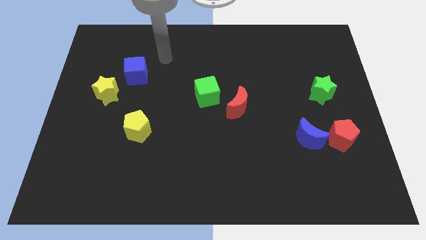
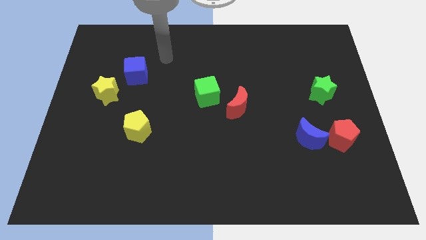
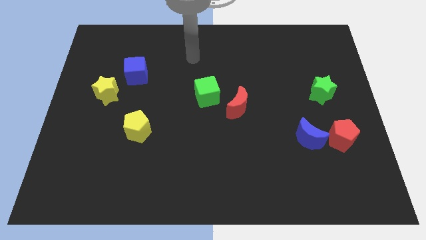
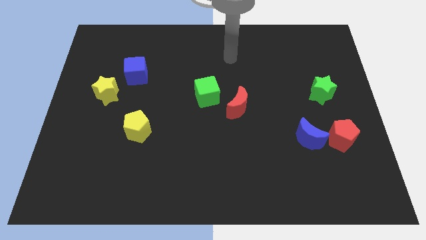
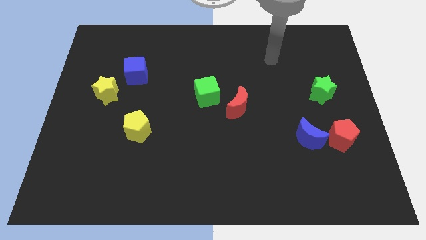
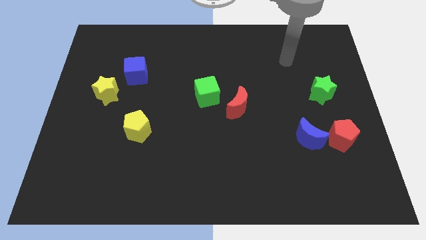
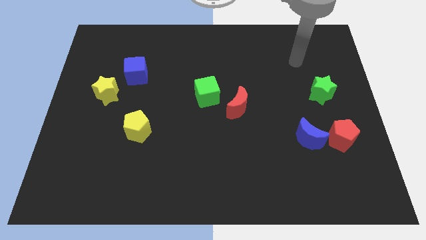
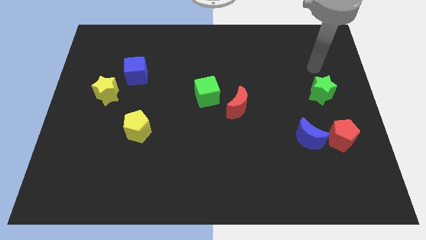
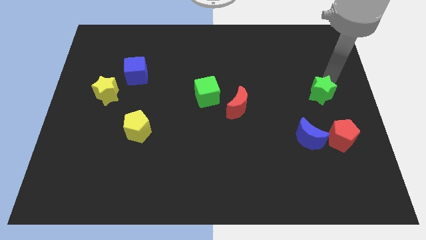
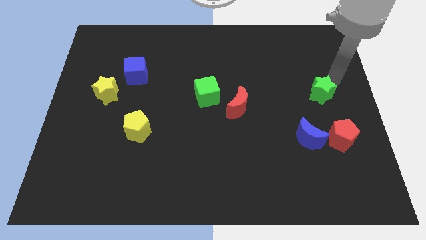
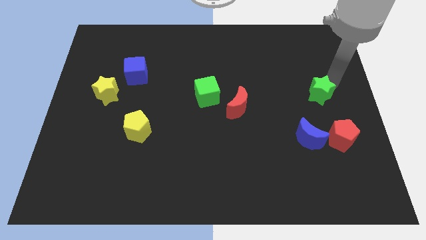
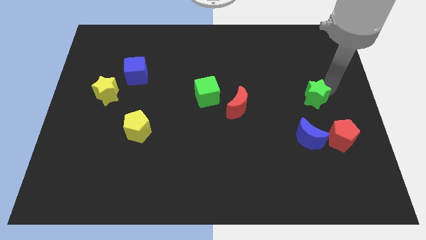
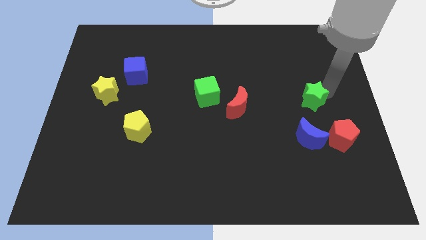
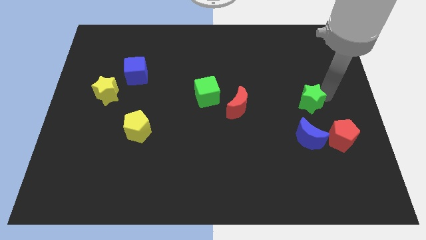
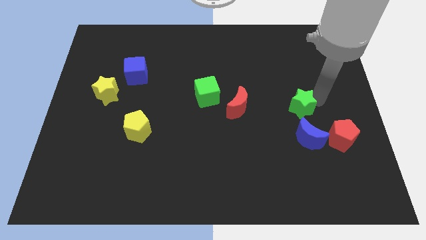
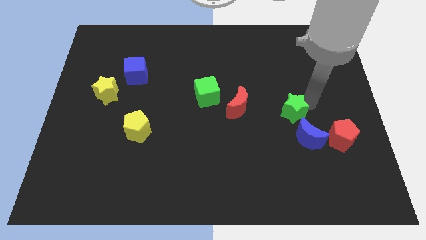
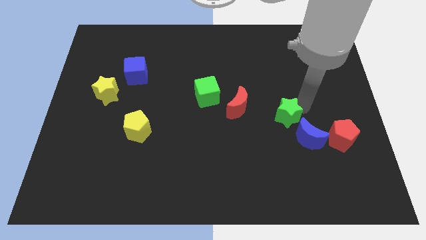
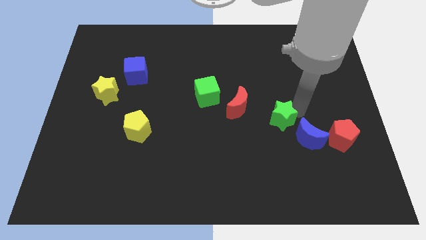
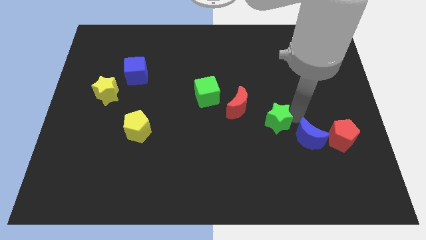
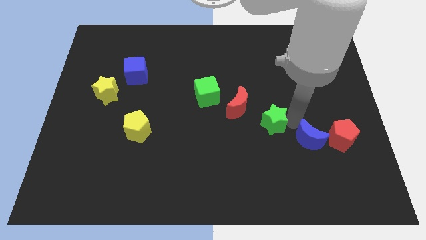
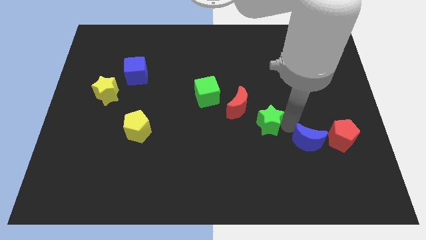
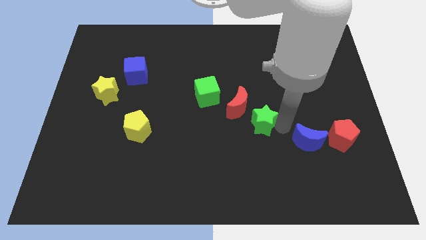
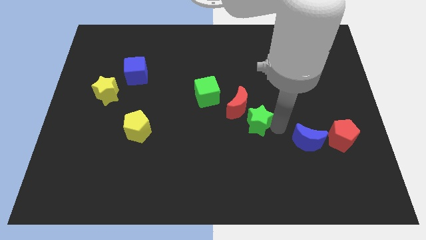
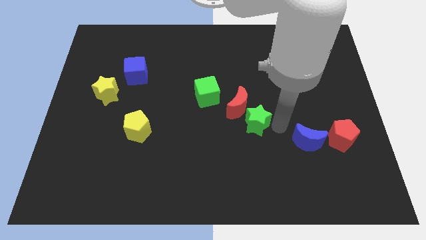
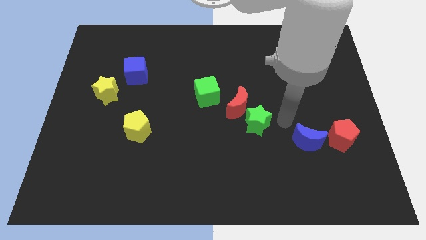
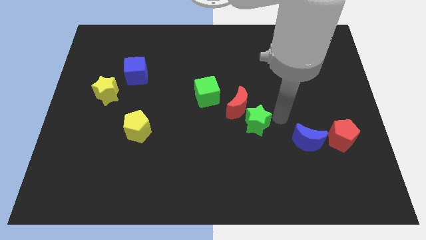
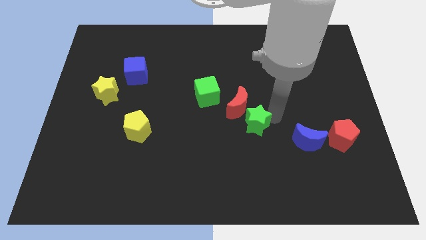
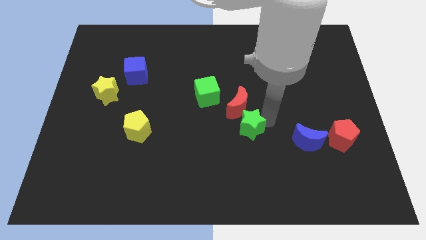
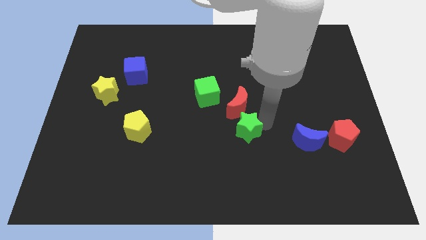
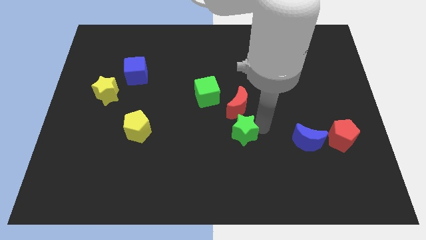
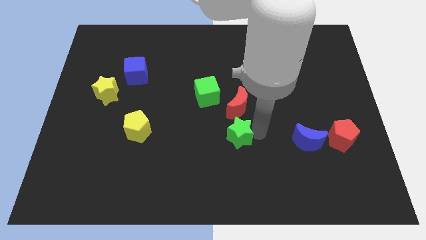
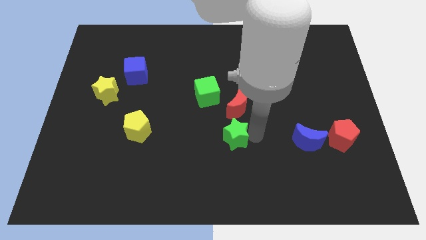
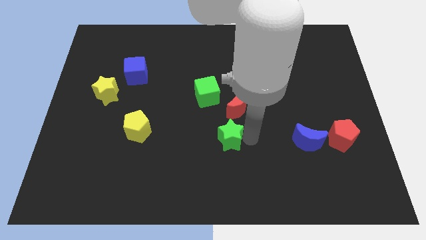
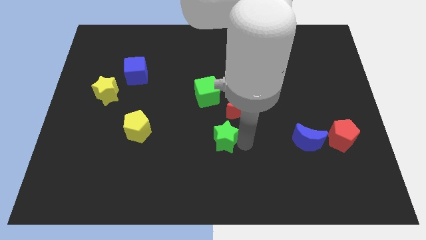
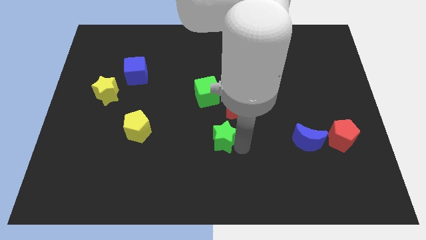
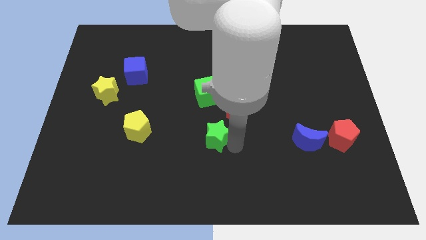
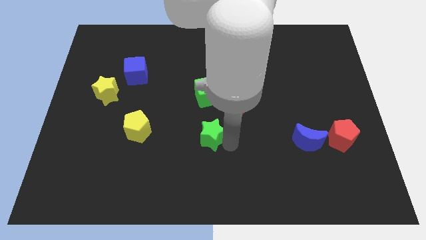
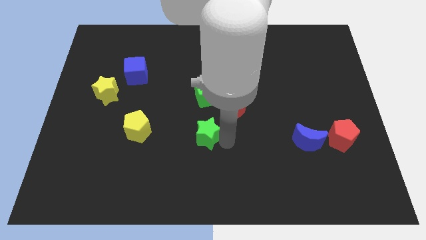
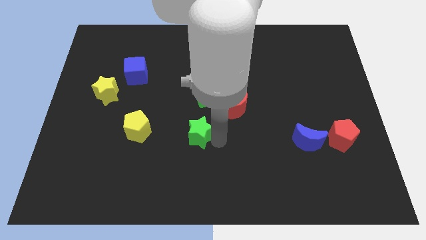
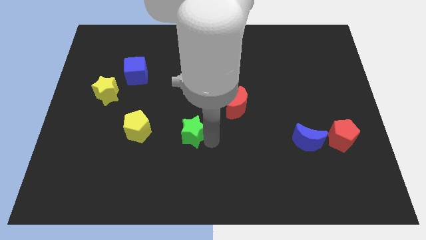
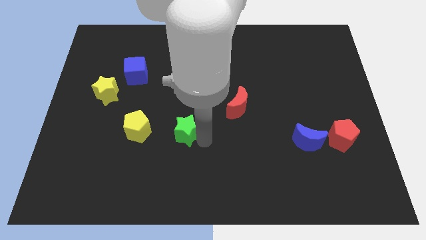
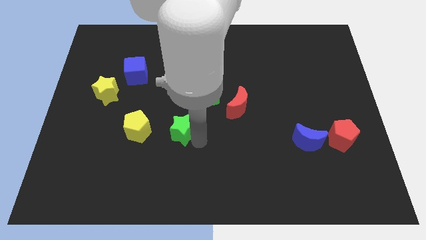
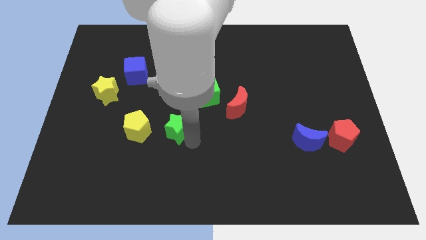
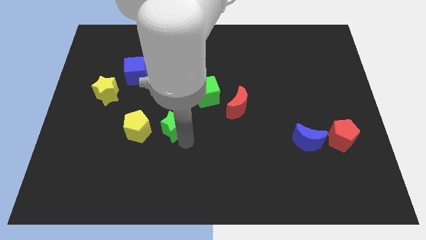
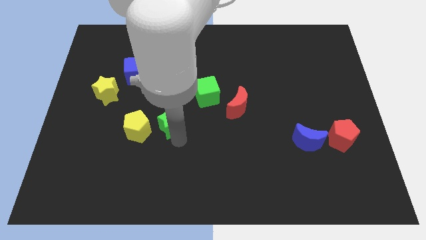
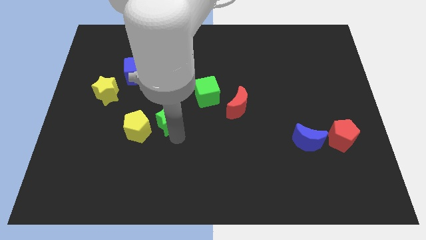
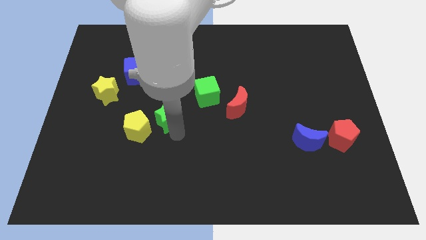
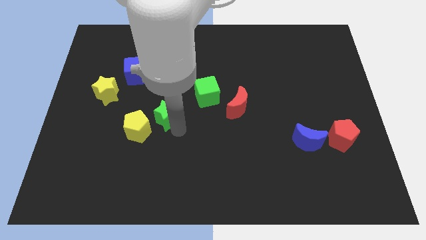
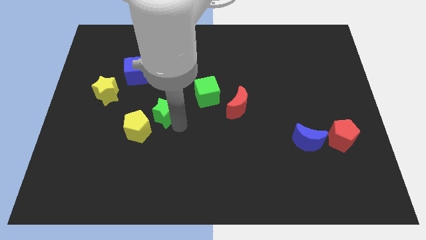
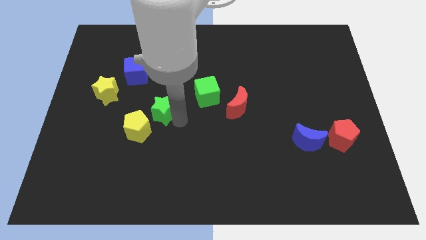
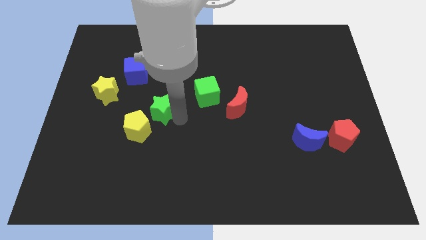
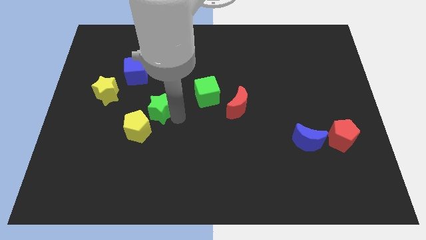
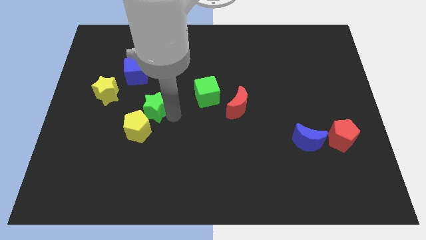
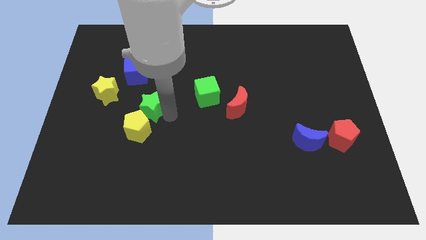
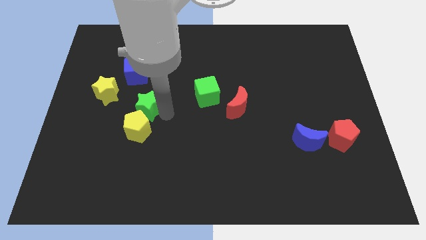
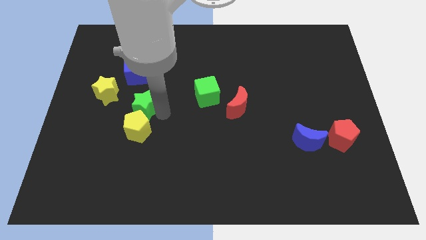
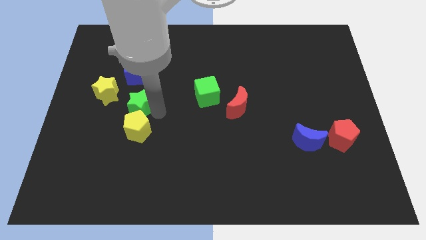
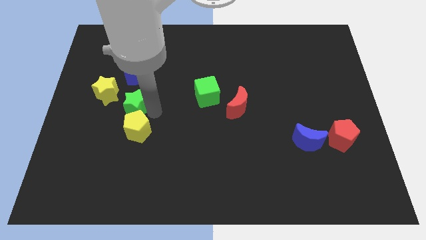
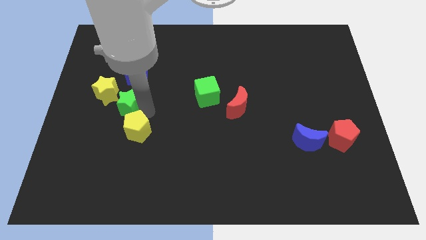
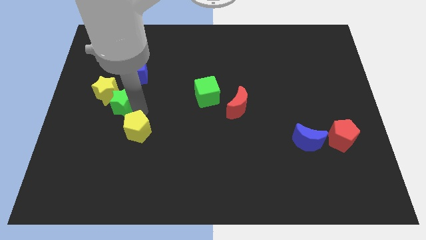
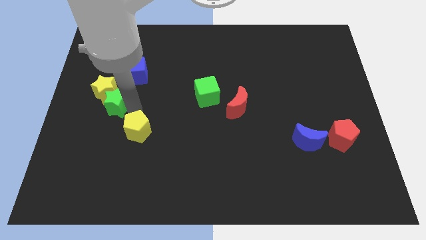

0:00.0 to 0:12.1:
push the green star towards the yellow star

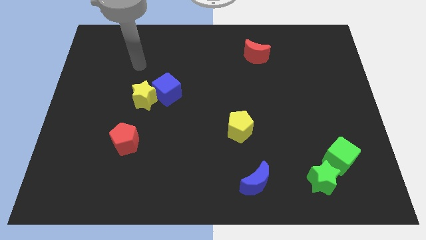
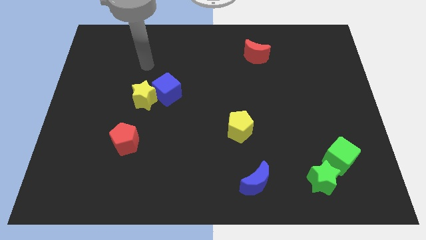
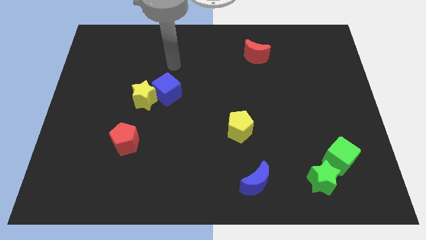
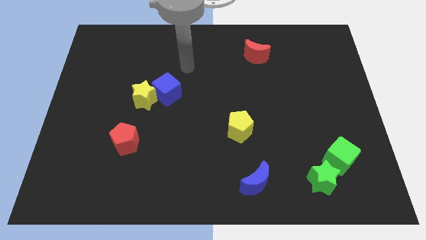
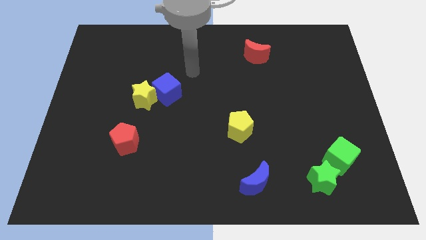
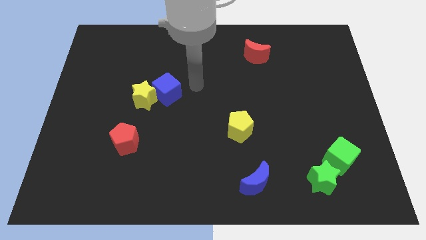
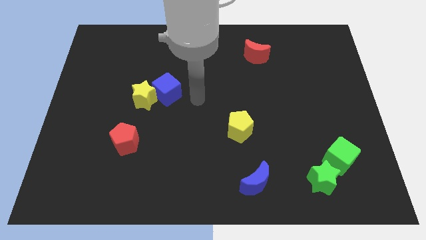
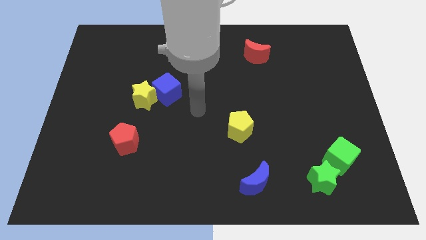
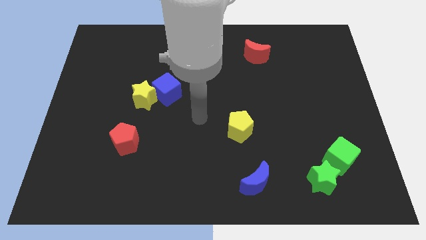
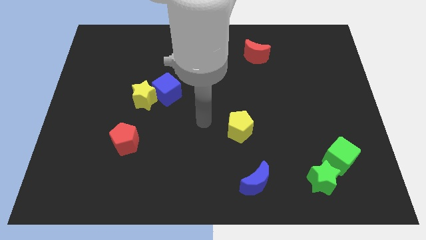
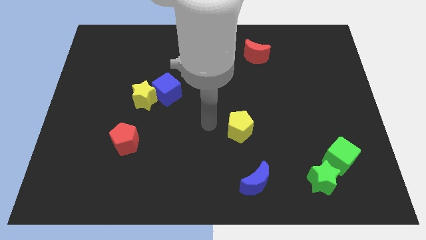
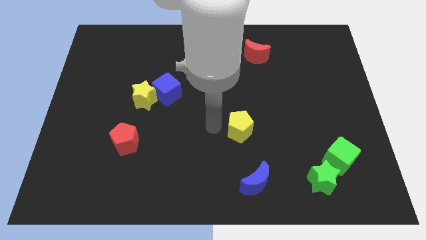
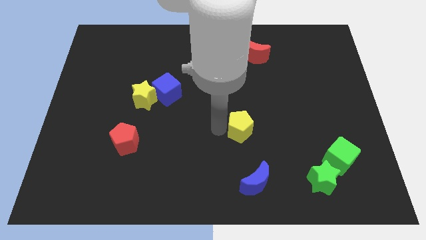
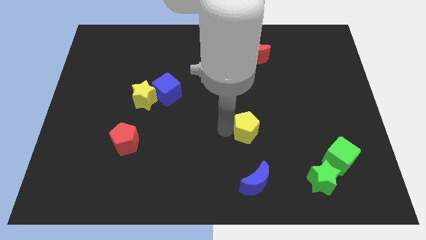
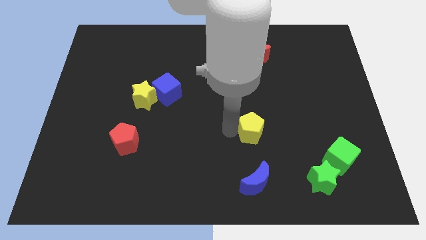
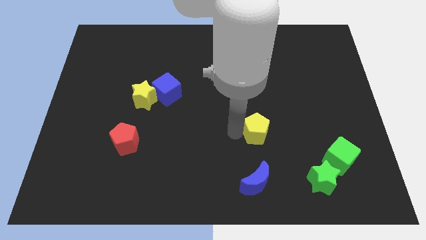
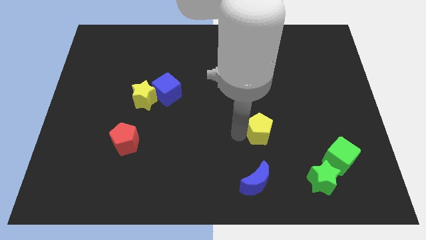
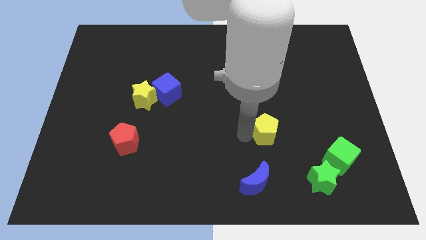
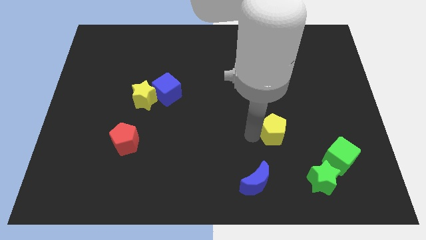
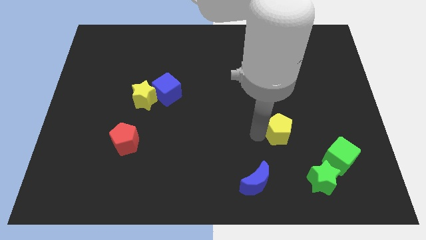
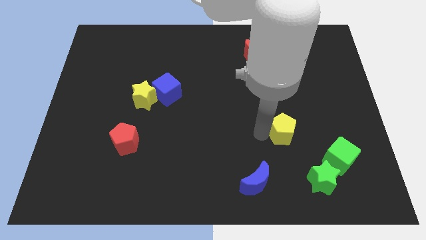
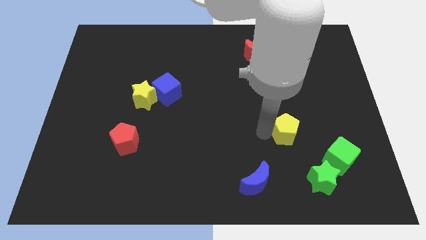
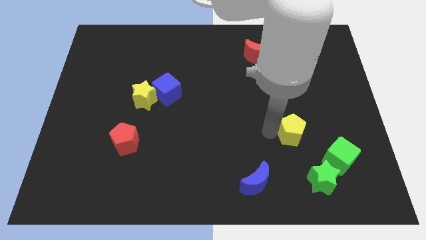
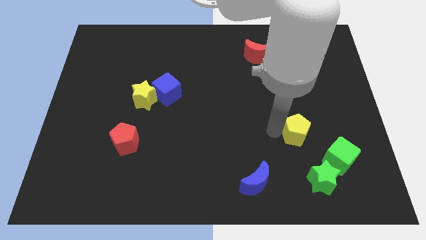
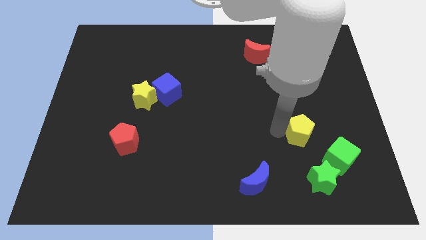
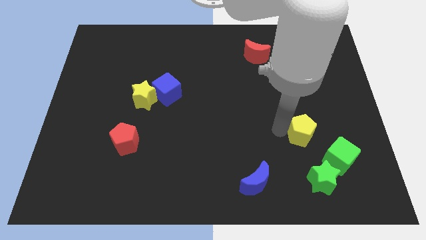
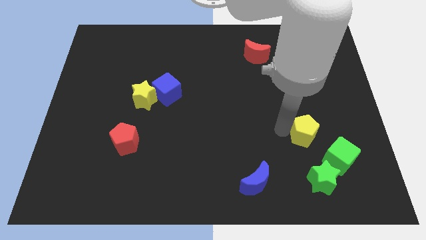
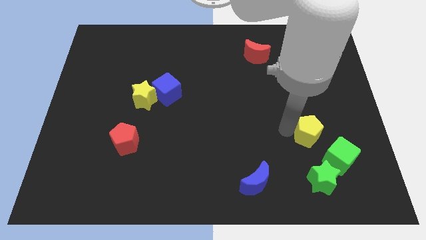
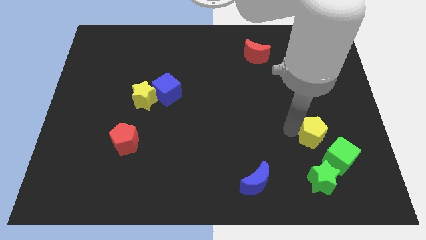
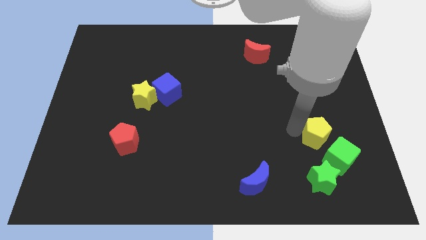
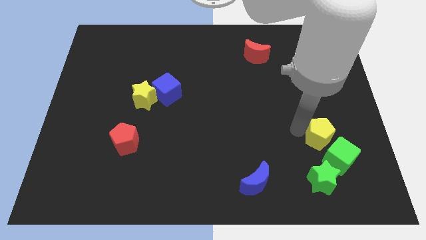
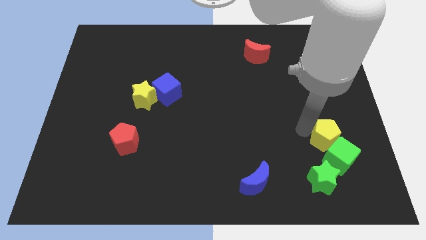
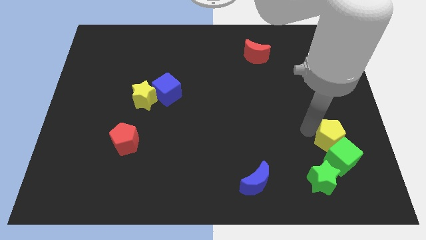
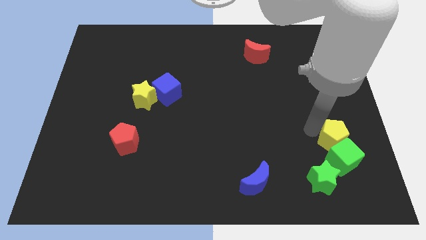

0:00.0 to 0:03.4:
push the yellow pentagon to the green cube
